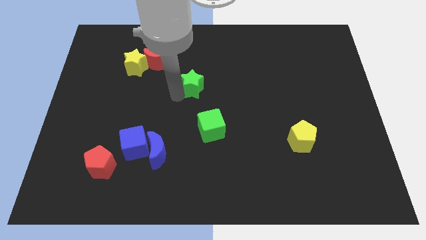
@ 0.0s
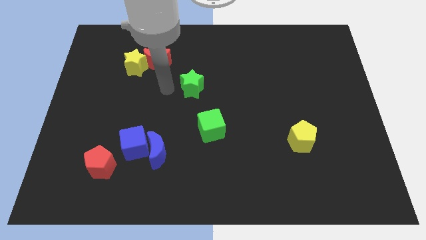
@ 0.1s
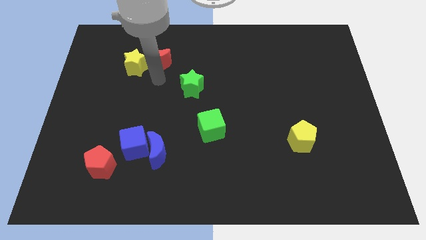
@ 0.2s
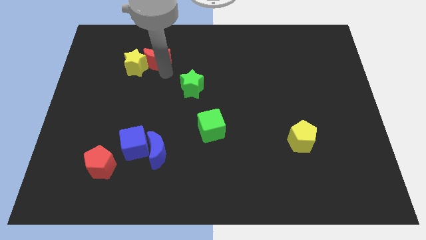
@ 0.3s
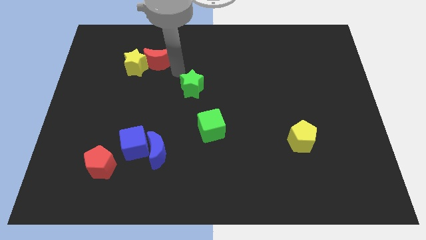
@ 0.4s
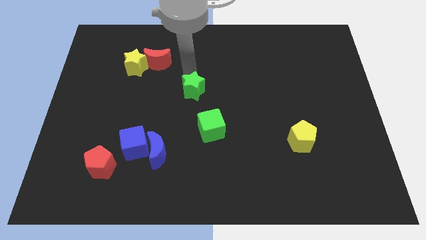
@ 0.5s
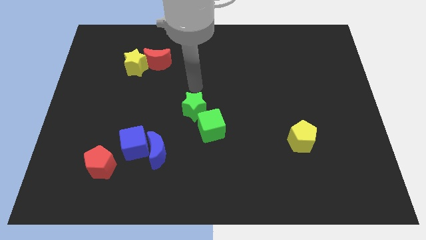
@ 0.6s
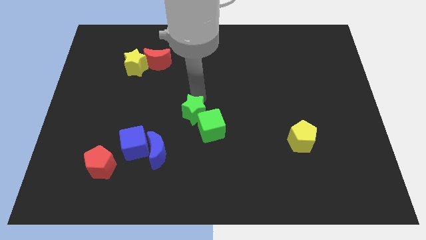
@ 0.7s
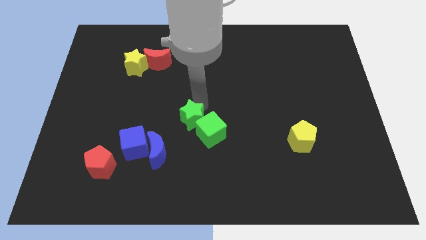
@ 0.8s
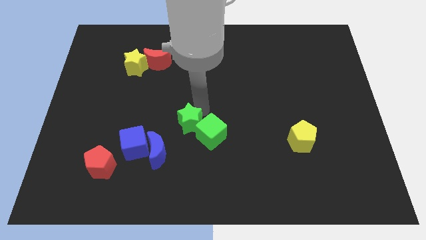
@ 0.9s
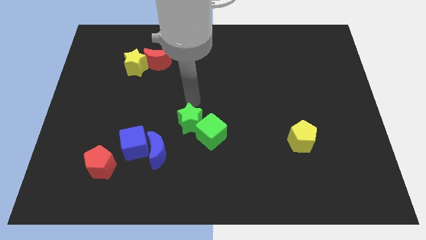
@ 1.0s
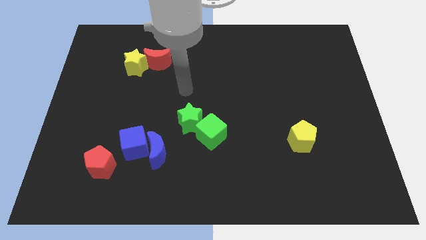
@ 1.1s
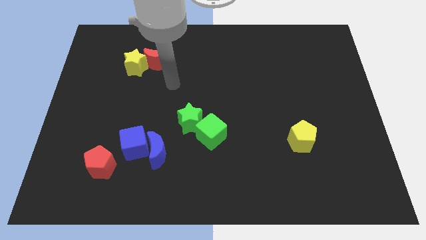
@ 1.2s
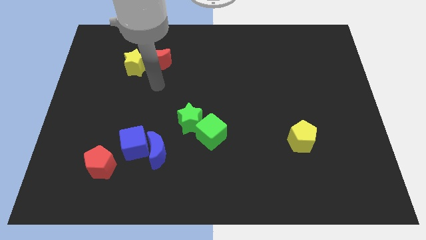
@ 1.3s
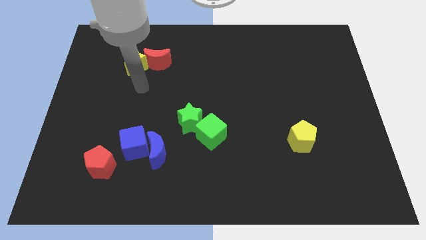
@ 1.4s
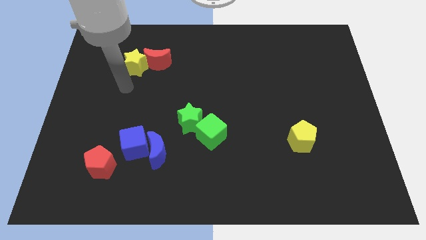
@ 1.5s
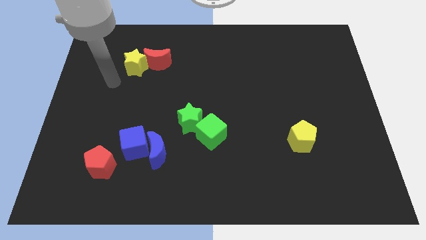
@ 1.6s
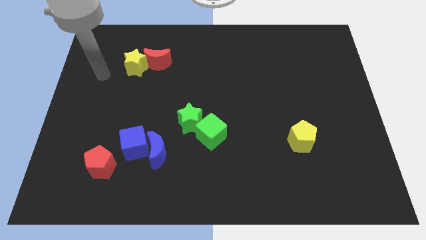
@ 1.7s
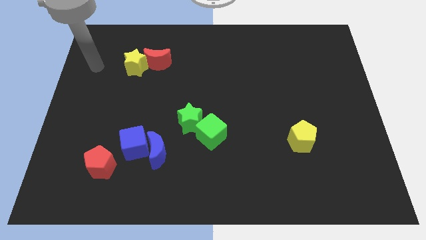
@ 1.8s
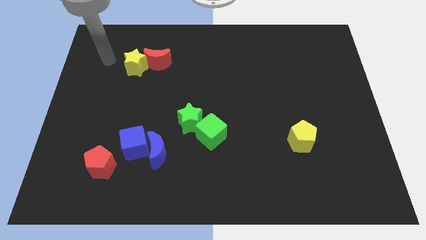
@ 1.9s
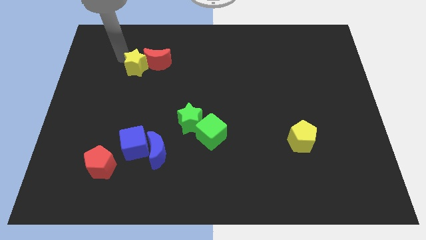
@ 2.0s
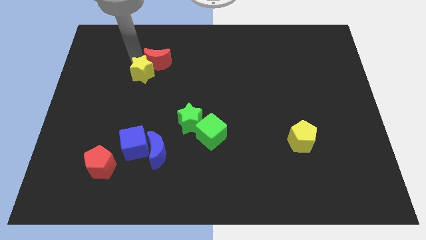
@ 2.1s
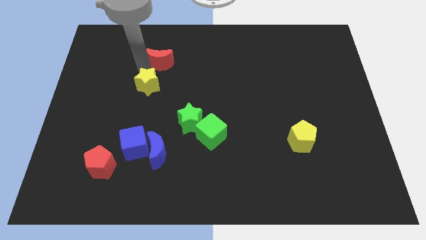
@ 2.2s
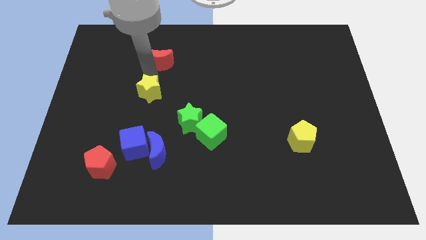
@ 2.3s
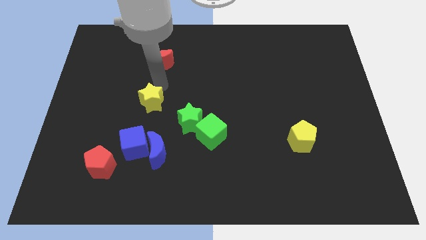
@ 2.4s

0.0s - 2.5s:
place yellow star above blue crescent

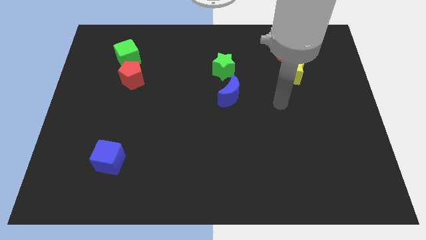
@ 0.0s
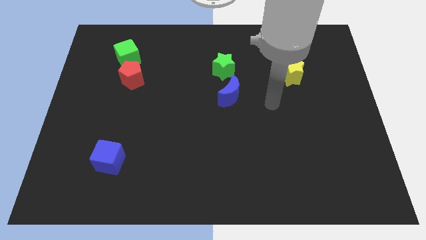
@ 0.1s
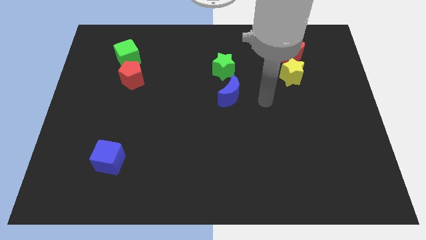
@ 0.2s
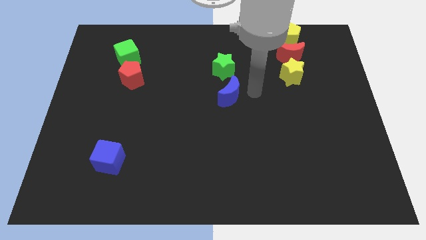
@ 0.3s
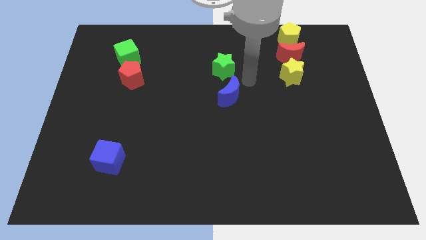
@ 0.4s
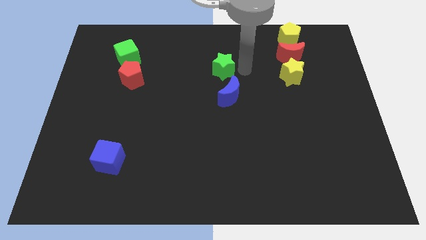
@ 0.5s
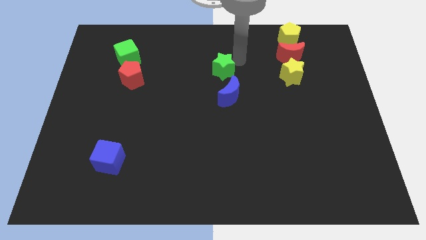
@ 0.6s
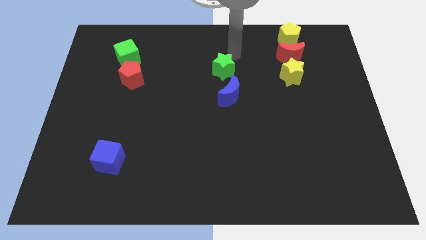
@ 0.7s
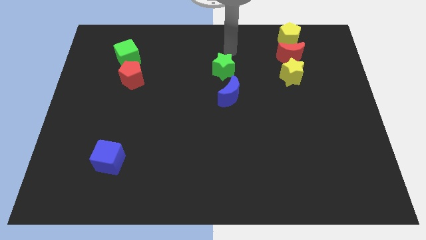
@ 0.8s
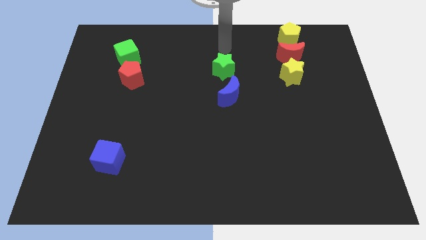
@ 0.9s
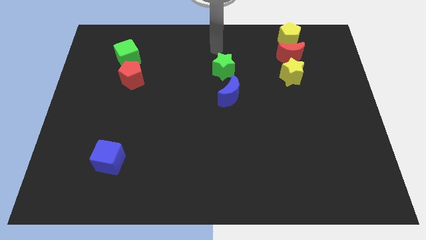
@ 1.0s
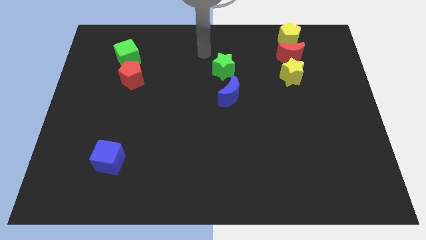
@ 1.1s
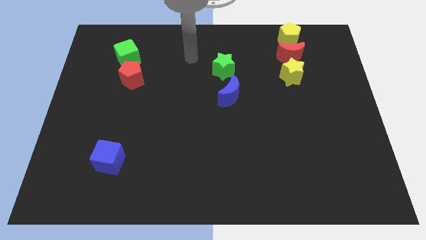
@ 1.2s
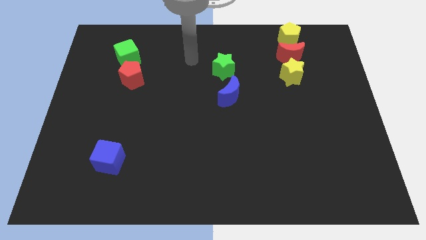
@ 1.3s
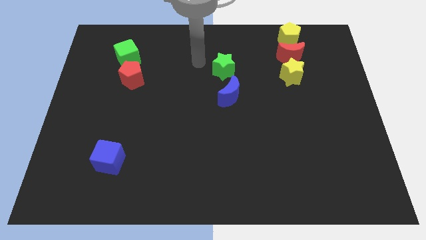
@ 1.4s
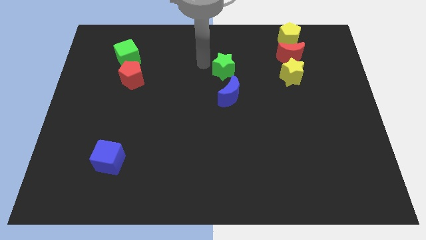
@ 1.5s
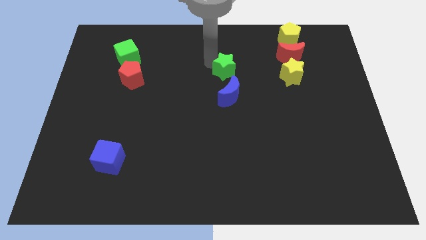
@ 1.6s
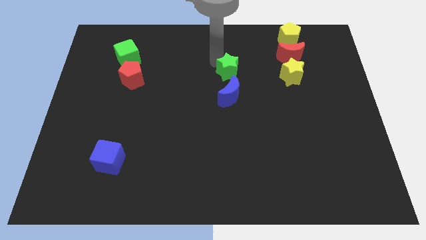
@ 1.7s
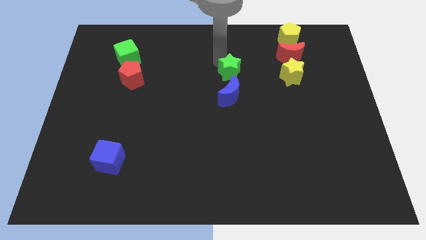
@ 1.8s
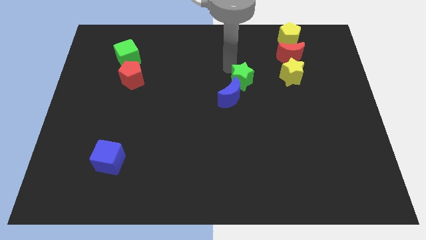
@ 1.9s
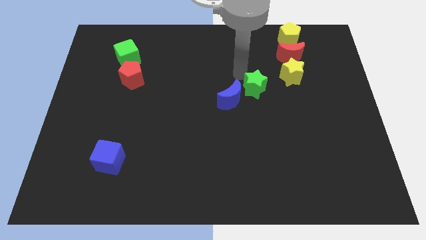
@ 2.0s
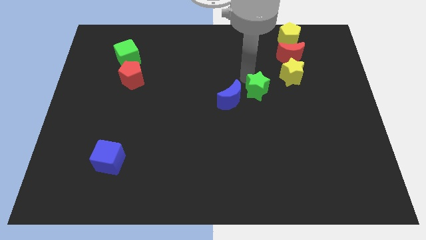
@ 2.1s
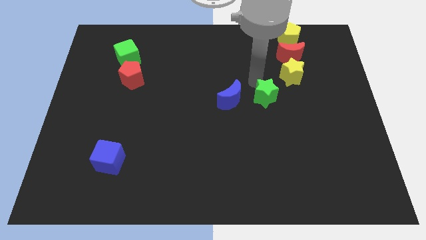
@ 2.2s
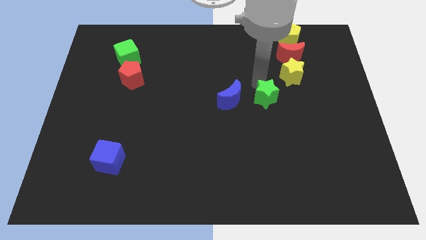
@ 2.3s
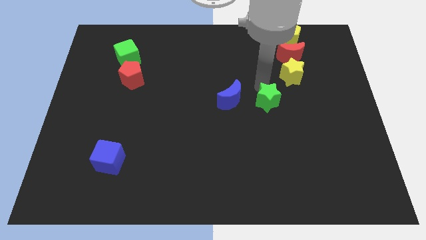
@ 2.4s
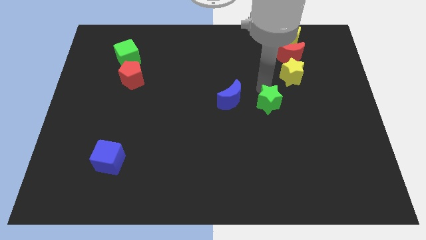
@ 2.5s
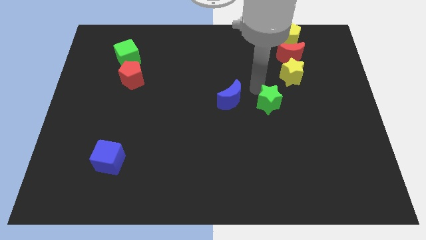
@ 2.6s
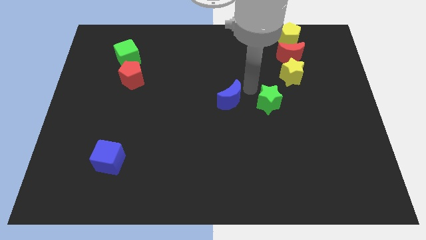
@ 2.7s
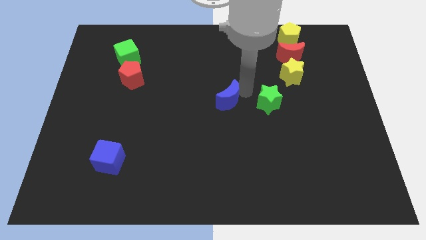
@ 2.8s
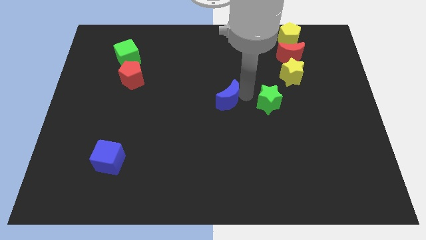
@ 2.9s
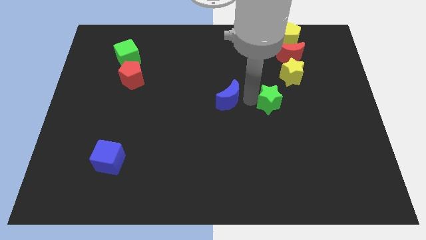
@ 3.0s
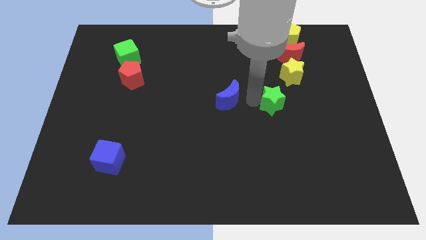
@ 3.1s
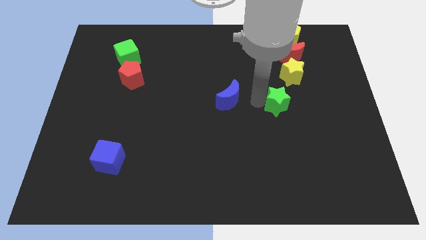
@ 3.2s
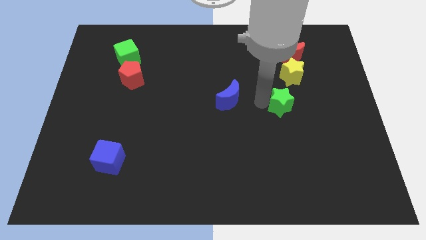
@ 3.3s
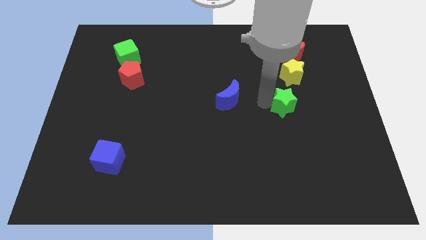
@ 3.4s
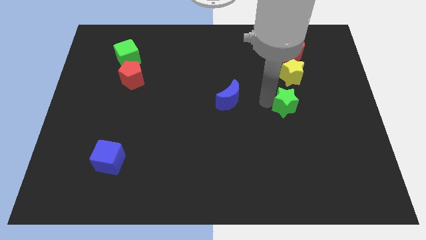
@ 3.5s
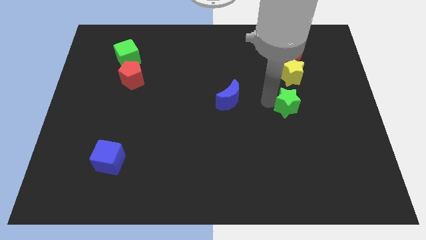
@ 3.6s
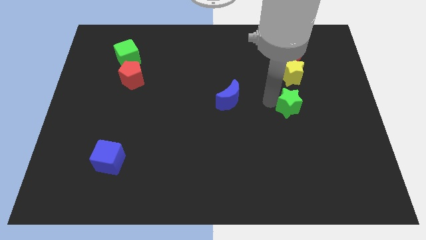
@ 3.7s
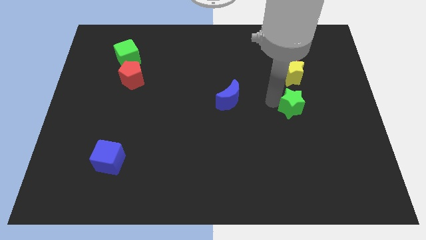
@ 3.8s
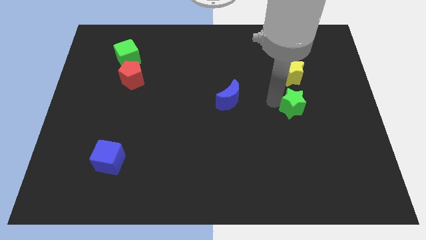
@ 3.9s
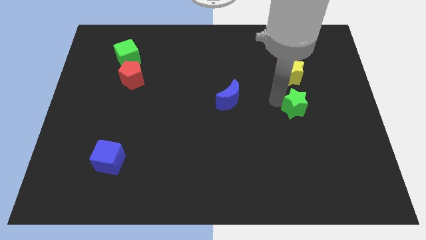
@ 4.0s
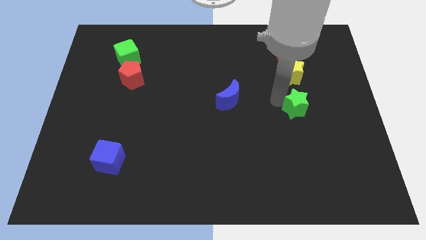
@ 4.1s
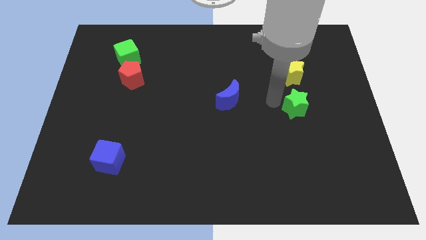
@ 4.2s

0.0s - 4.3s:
push the green star below the yellow star

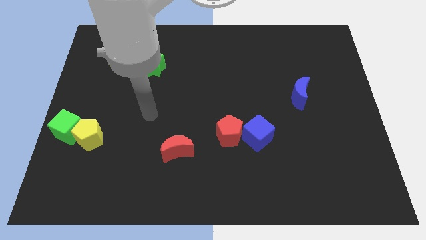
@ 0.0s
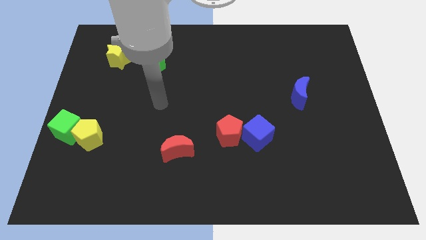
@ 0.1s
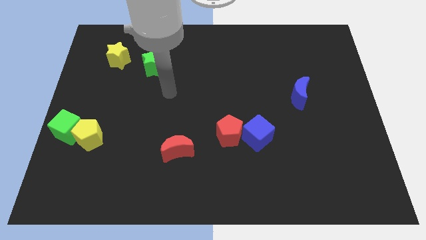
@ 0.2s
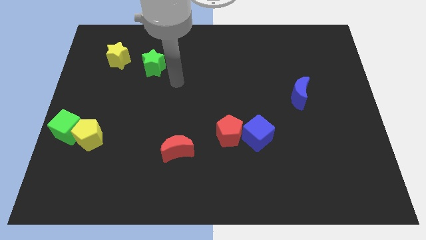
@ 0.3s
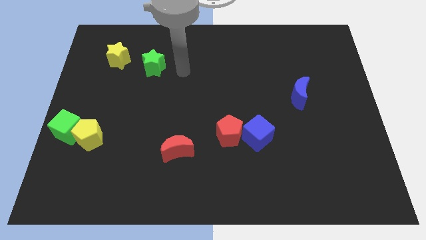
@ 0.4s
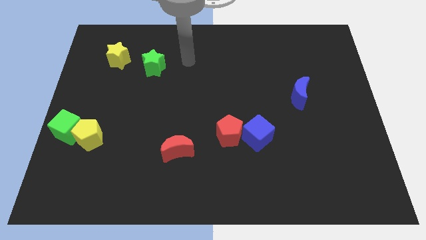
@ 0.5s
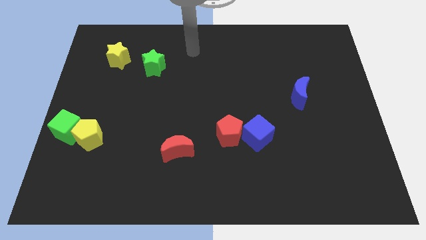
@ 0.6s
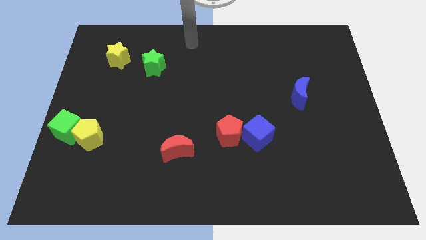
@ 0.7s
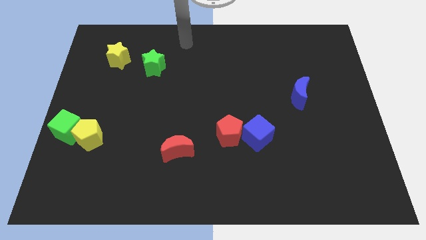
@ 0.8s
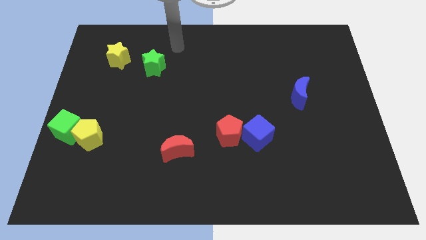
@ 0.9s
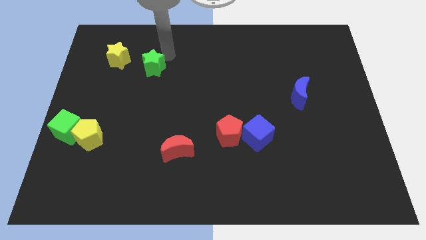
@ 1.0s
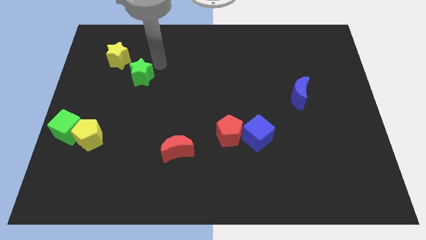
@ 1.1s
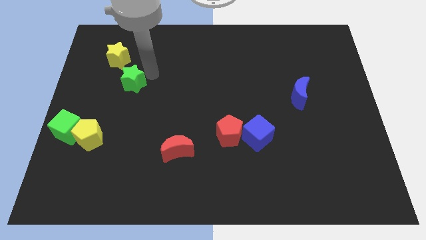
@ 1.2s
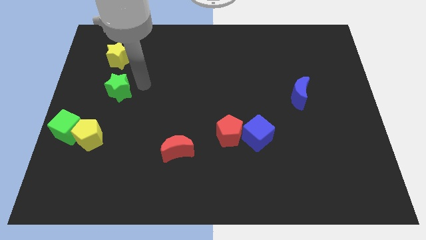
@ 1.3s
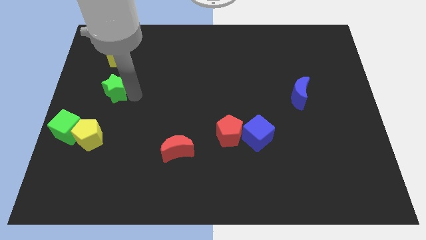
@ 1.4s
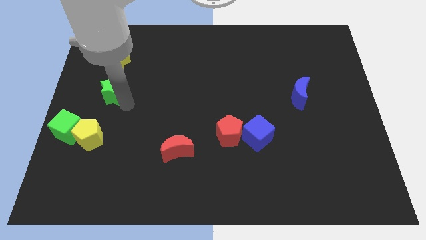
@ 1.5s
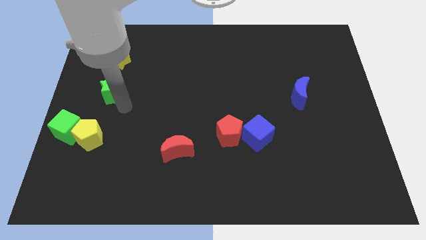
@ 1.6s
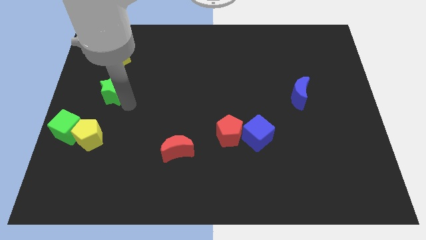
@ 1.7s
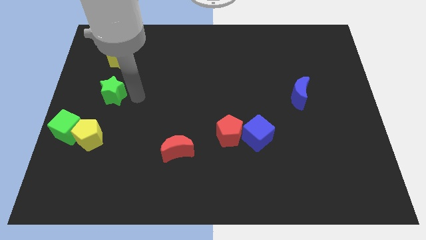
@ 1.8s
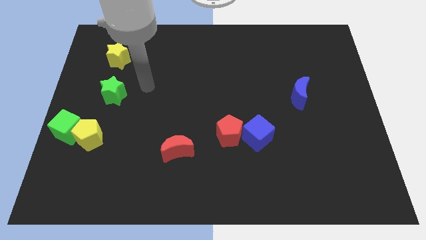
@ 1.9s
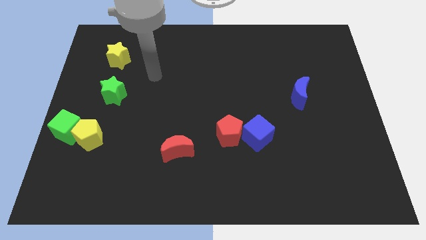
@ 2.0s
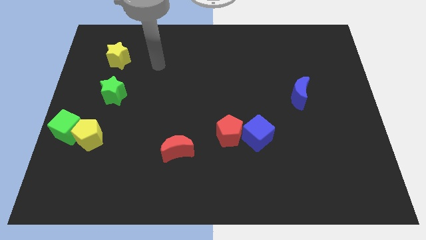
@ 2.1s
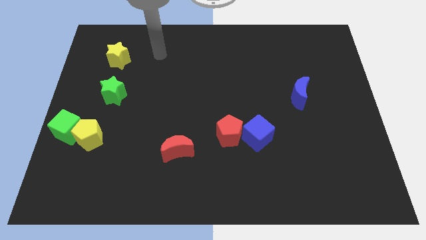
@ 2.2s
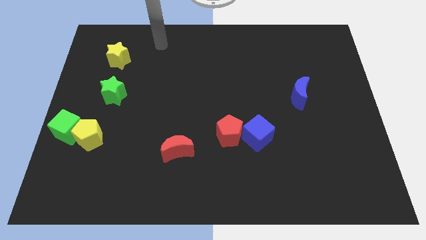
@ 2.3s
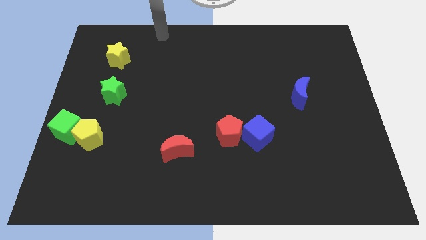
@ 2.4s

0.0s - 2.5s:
place the green star to the bottom of yellow star
